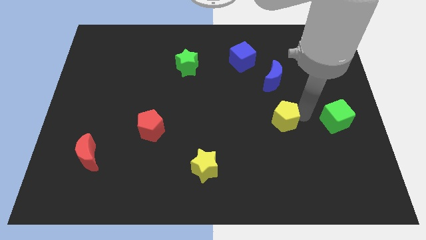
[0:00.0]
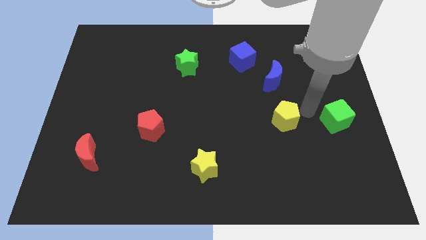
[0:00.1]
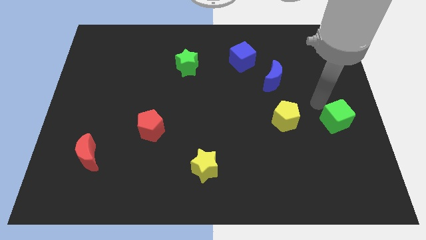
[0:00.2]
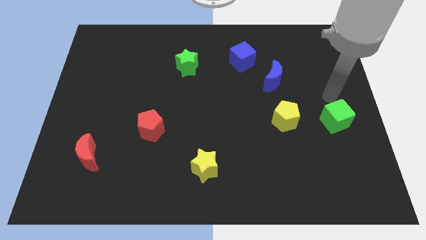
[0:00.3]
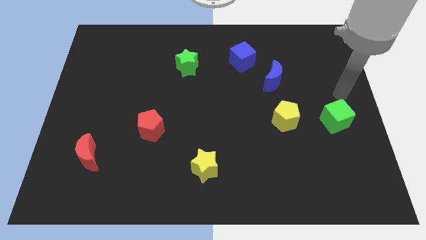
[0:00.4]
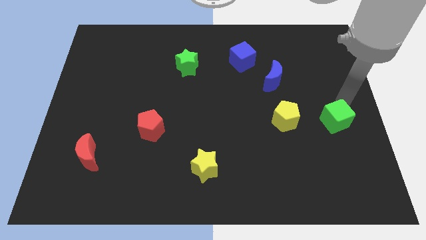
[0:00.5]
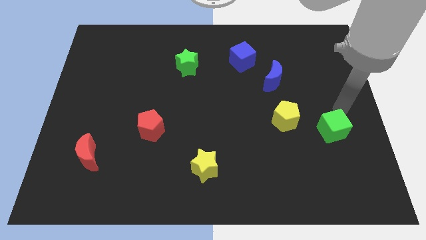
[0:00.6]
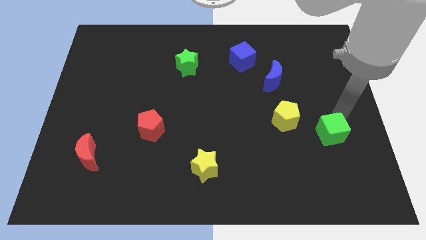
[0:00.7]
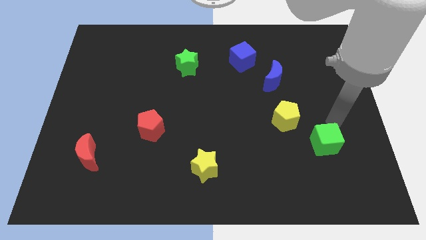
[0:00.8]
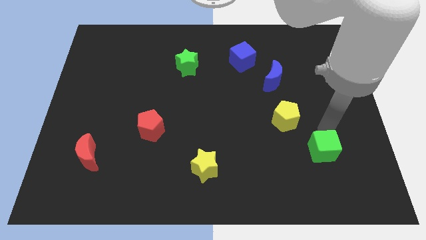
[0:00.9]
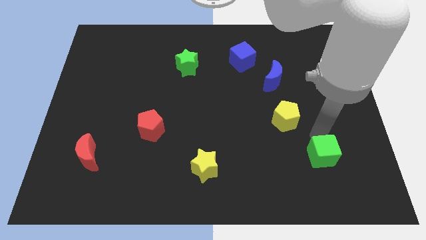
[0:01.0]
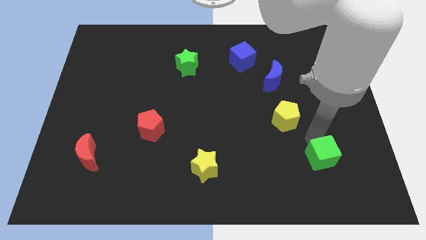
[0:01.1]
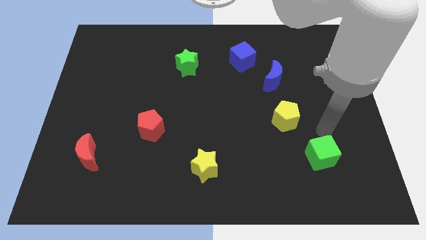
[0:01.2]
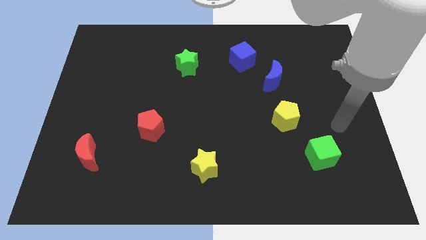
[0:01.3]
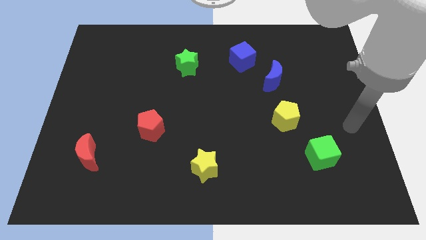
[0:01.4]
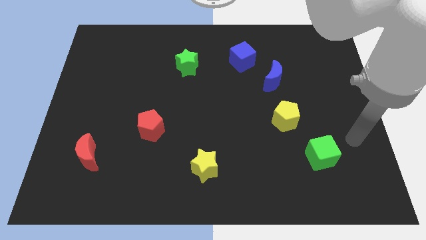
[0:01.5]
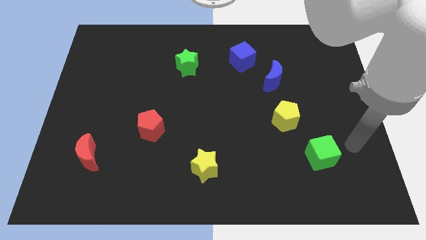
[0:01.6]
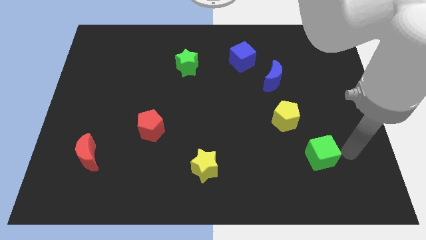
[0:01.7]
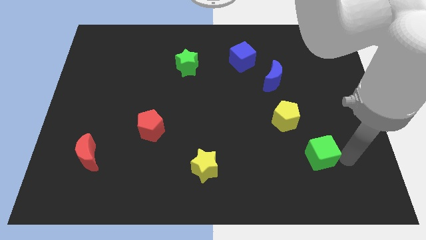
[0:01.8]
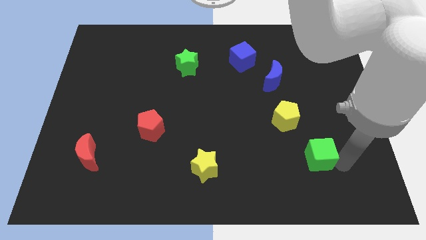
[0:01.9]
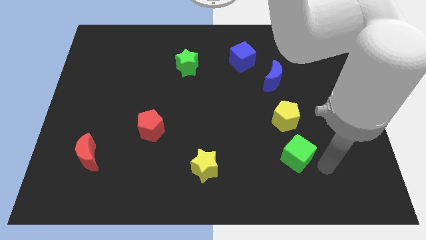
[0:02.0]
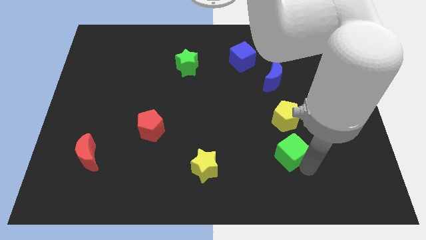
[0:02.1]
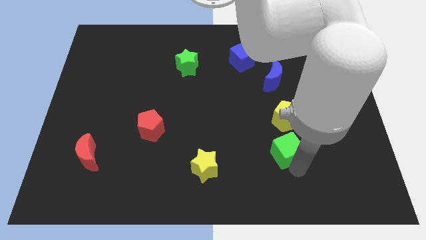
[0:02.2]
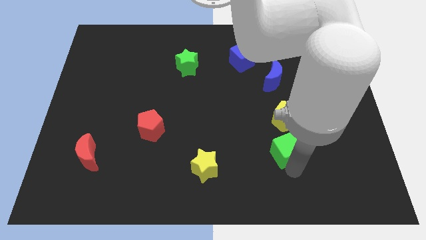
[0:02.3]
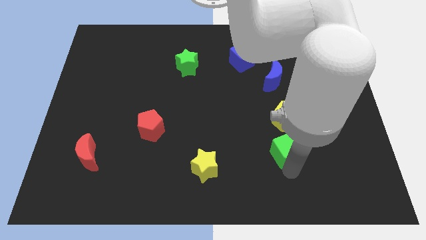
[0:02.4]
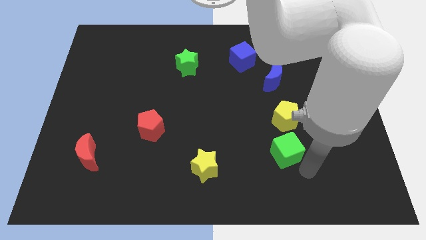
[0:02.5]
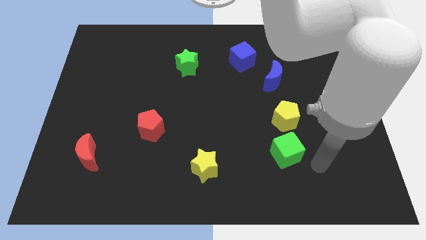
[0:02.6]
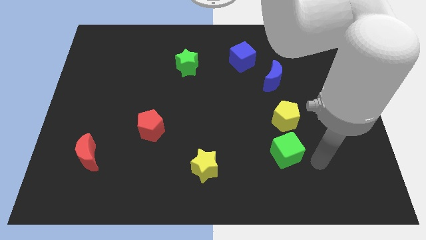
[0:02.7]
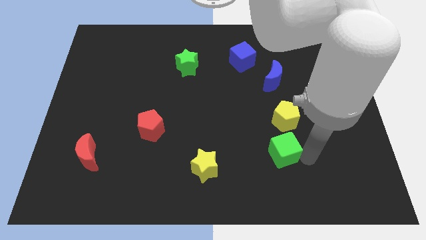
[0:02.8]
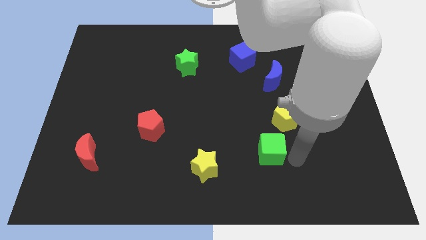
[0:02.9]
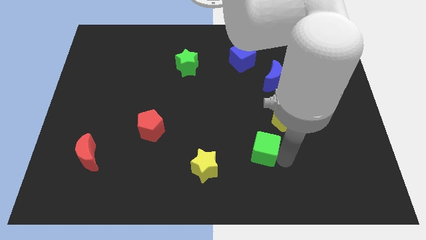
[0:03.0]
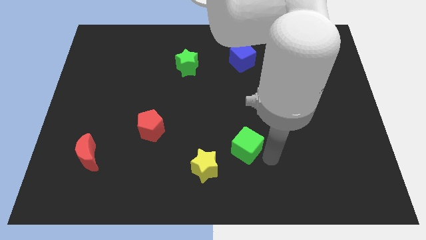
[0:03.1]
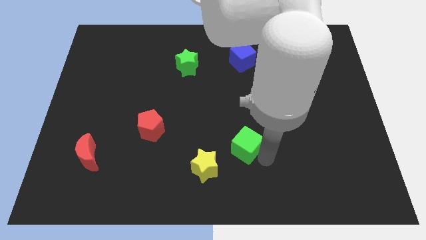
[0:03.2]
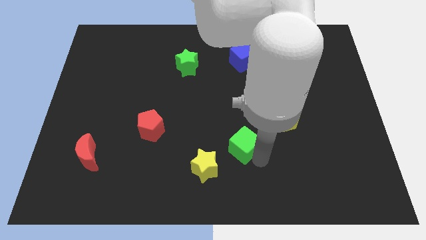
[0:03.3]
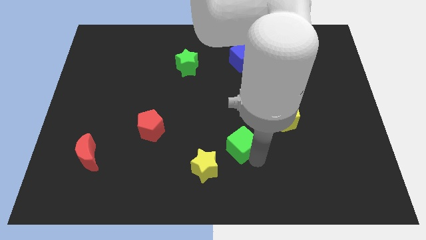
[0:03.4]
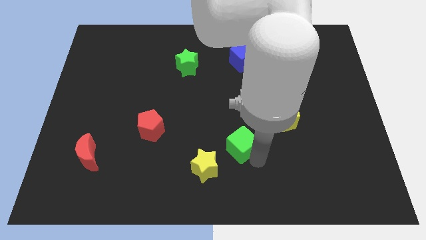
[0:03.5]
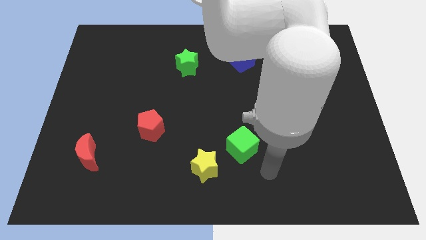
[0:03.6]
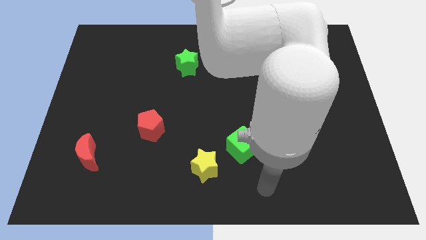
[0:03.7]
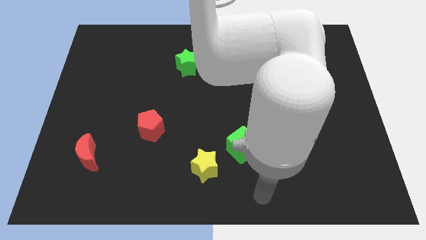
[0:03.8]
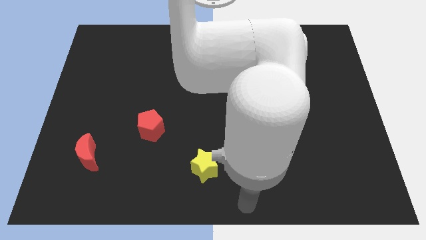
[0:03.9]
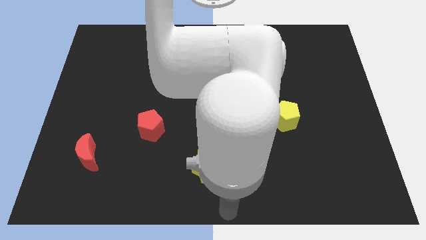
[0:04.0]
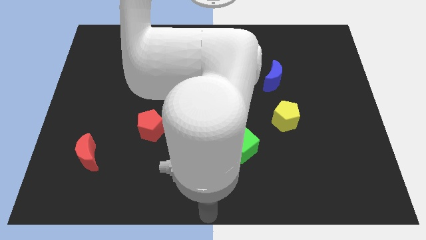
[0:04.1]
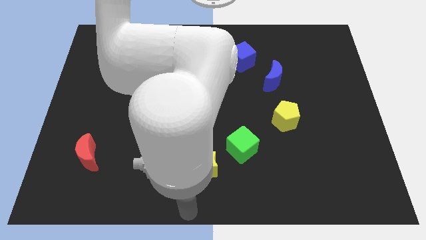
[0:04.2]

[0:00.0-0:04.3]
place the green cube in between the yellow pentagon and the yellow star

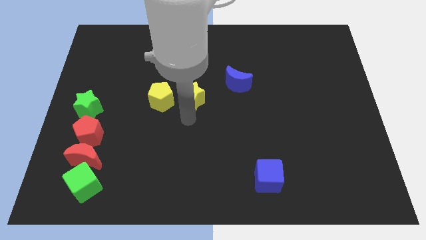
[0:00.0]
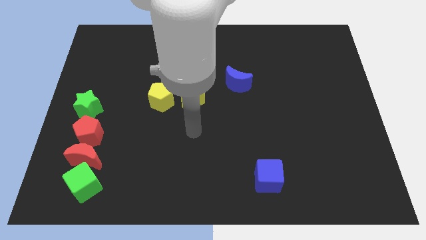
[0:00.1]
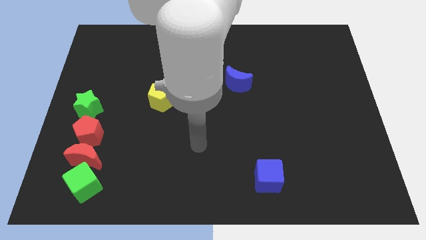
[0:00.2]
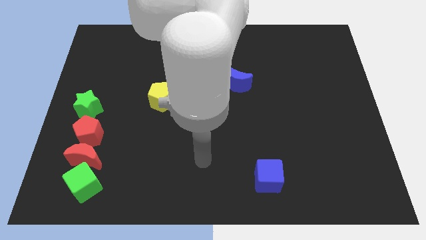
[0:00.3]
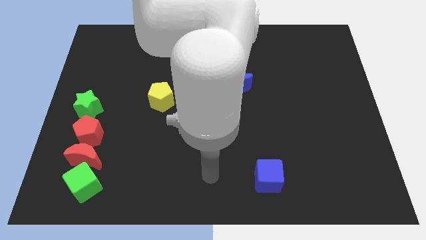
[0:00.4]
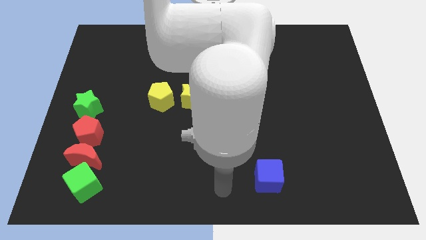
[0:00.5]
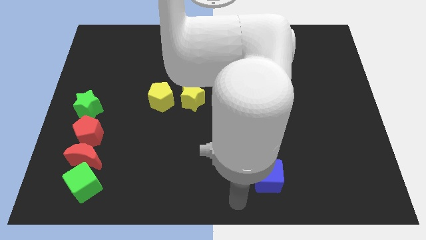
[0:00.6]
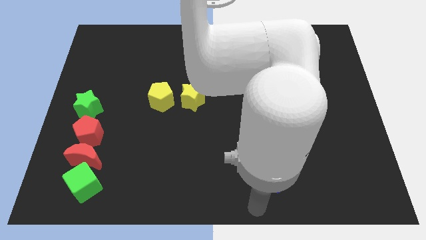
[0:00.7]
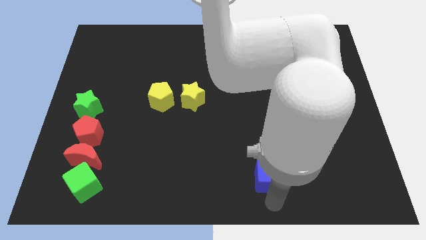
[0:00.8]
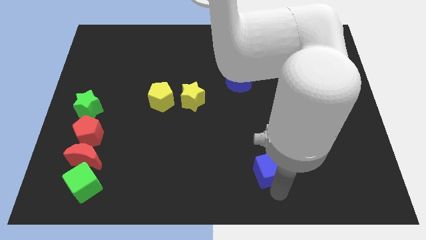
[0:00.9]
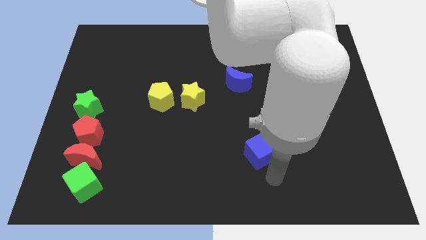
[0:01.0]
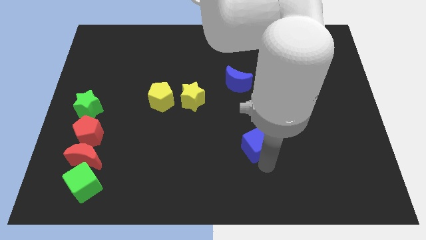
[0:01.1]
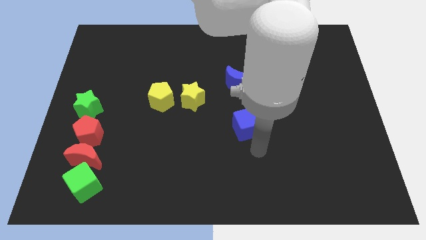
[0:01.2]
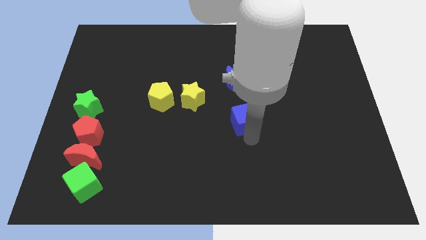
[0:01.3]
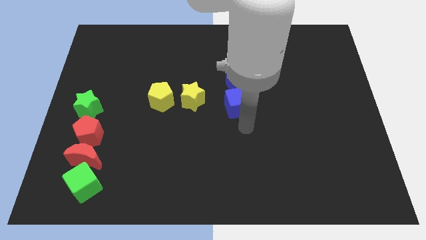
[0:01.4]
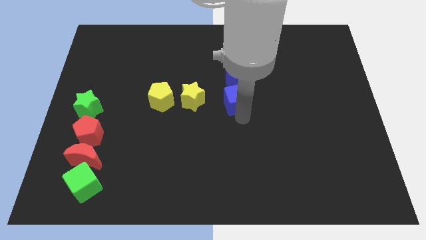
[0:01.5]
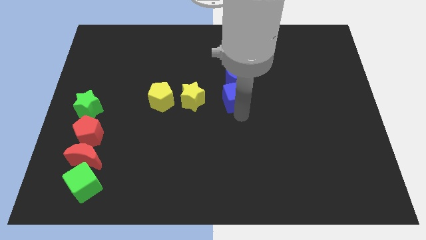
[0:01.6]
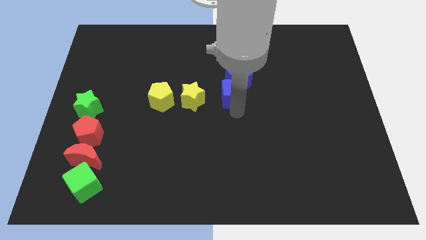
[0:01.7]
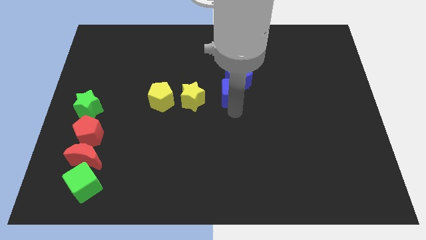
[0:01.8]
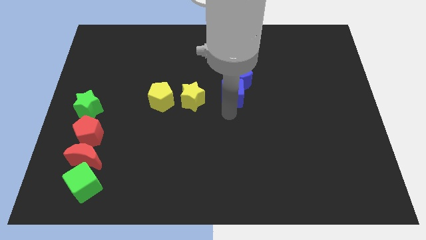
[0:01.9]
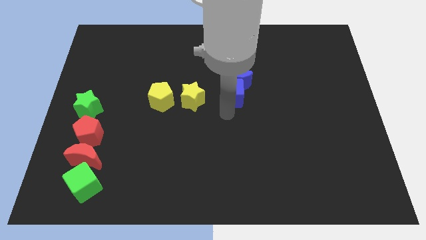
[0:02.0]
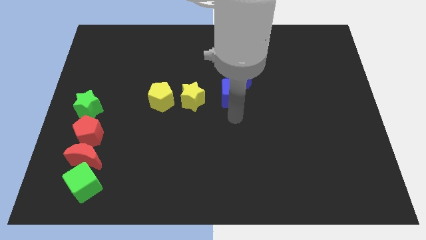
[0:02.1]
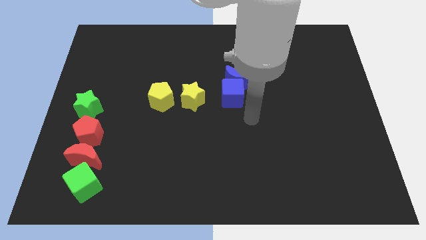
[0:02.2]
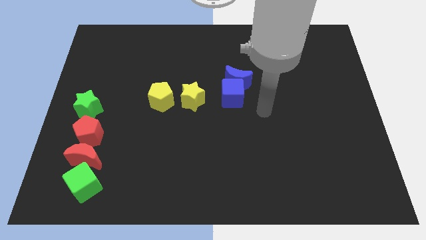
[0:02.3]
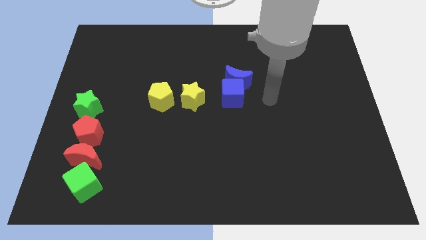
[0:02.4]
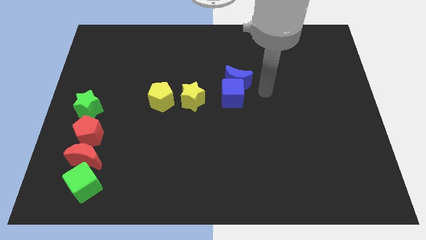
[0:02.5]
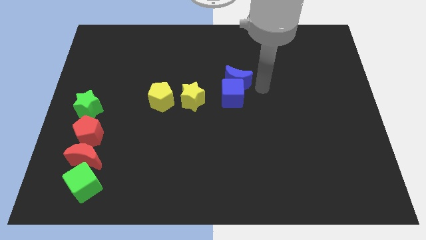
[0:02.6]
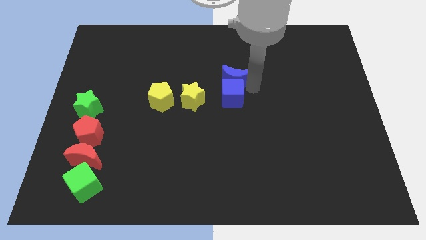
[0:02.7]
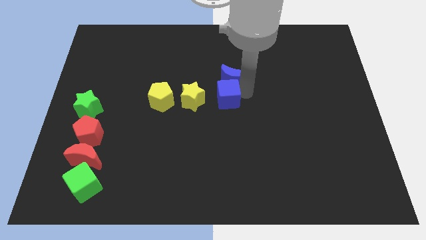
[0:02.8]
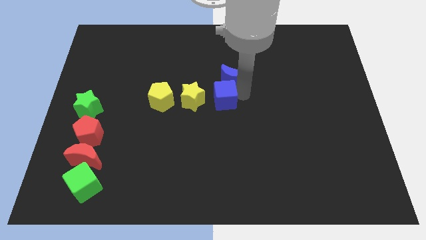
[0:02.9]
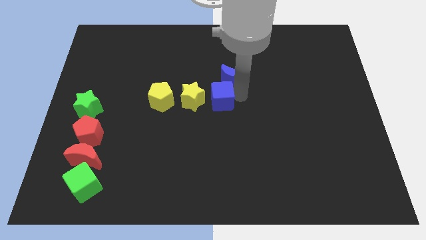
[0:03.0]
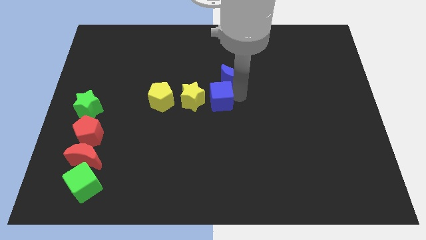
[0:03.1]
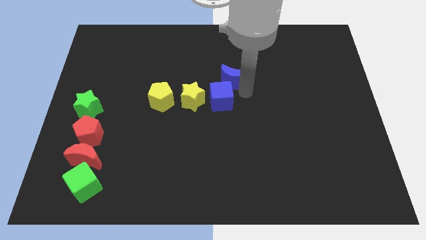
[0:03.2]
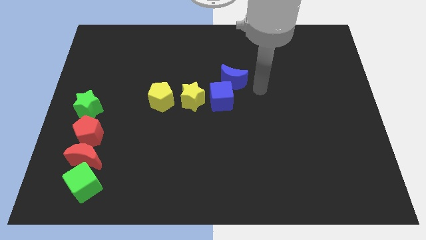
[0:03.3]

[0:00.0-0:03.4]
move the blue cube to the right of the yellow star

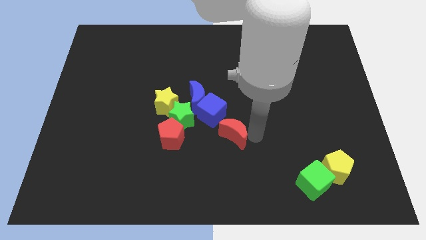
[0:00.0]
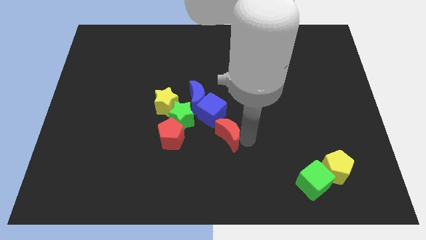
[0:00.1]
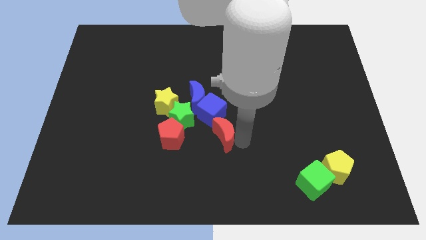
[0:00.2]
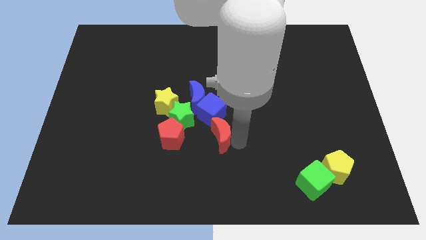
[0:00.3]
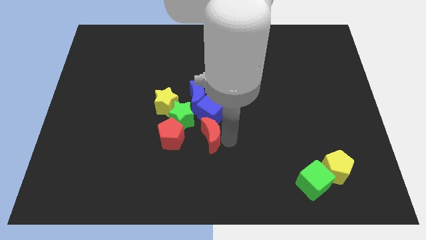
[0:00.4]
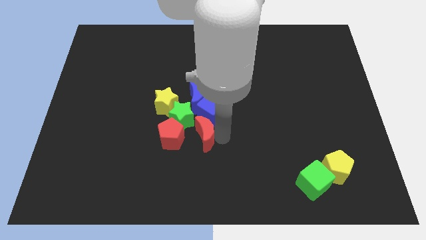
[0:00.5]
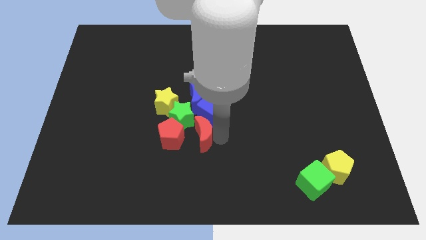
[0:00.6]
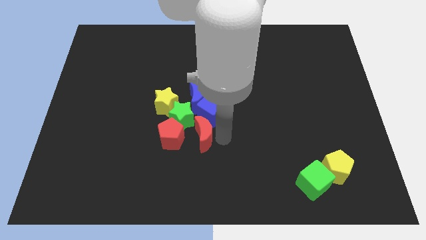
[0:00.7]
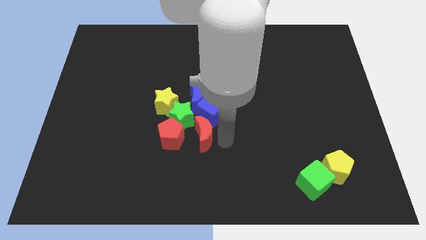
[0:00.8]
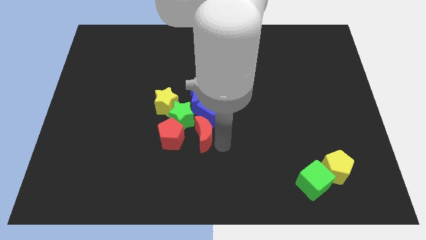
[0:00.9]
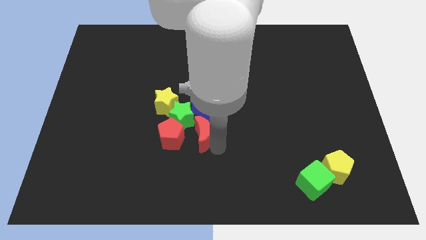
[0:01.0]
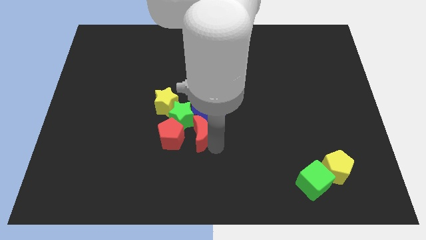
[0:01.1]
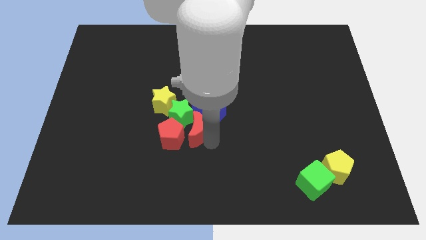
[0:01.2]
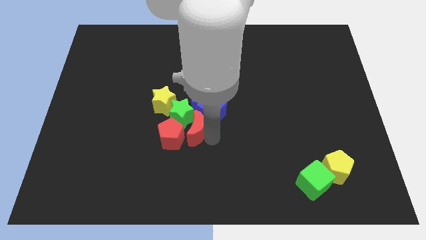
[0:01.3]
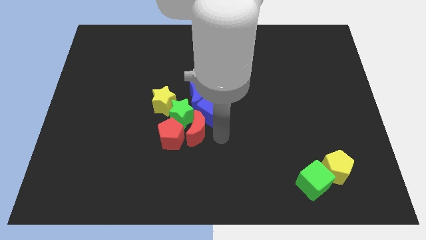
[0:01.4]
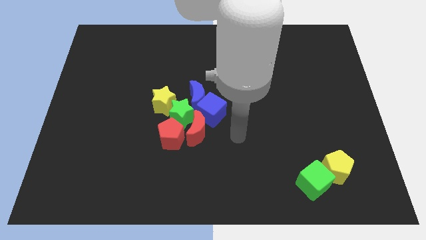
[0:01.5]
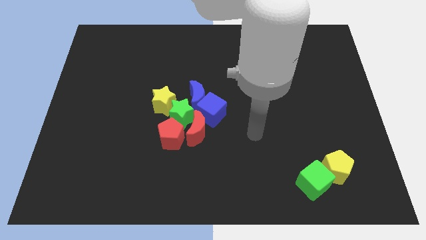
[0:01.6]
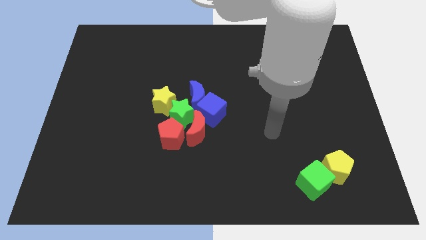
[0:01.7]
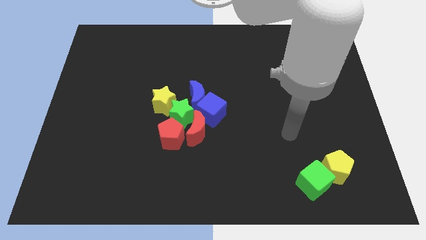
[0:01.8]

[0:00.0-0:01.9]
slightly touch green star with red crescent
